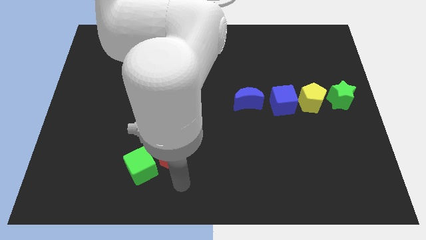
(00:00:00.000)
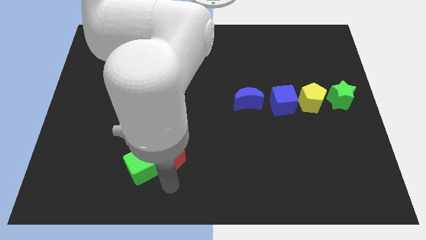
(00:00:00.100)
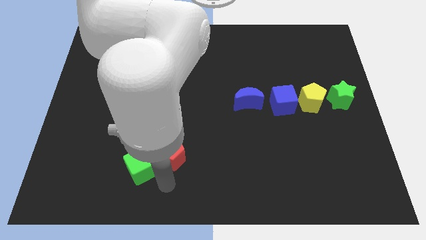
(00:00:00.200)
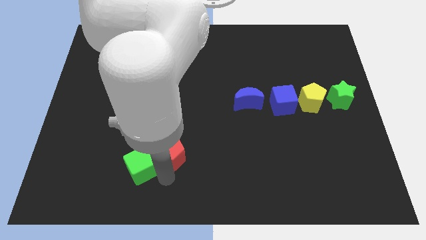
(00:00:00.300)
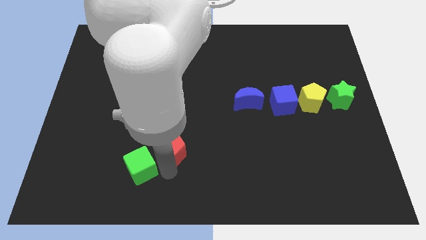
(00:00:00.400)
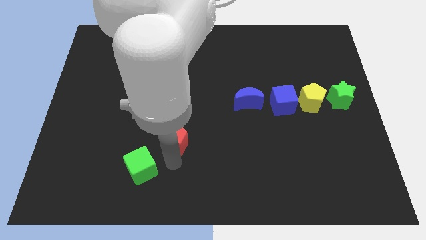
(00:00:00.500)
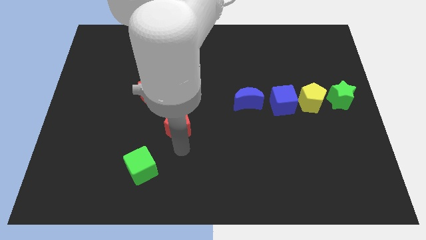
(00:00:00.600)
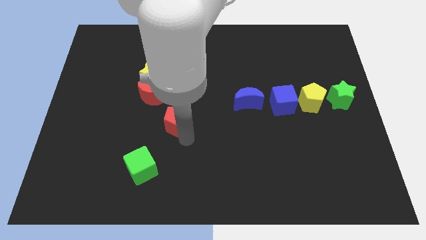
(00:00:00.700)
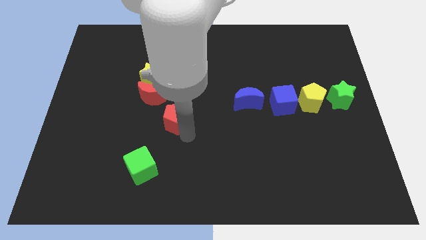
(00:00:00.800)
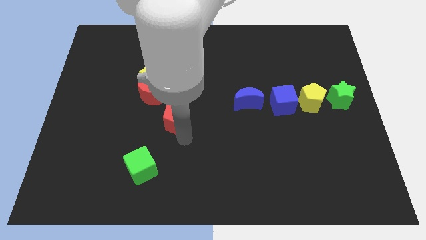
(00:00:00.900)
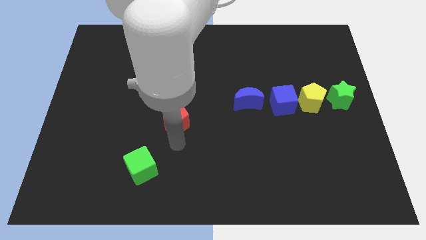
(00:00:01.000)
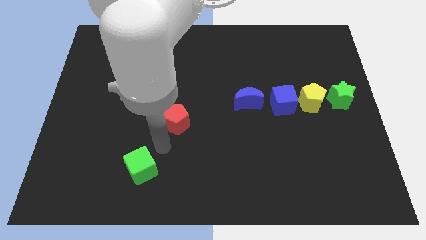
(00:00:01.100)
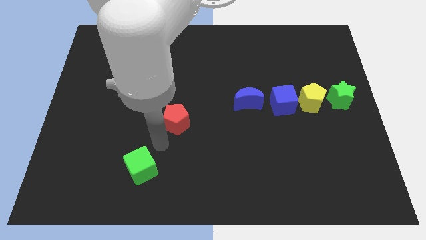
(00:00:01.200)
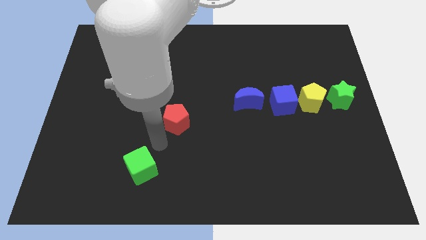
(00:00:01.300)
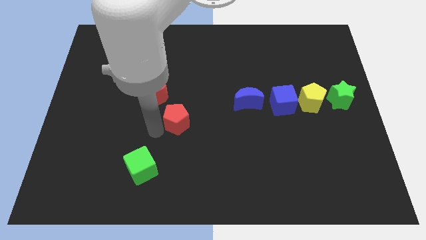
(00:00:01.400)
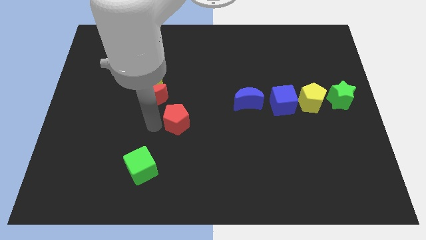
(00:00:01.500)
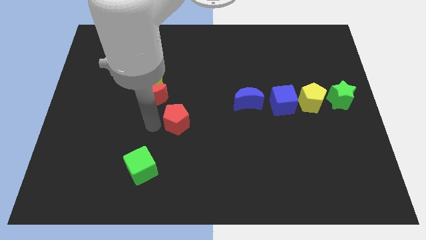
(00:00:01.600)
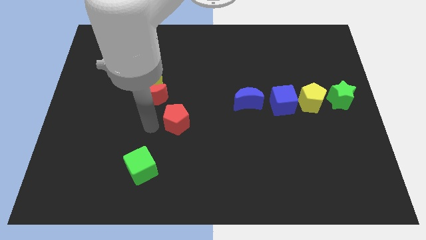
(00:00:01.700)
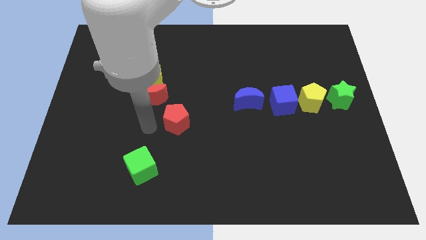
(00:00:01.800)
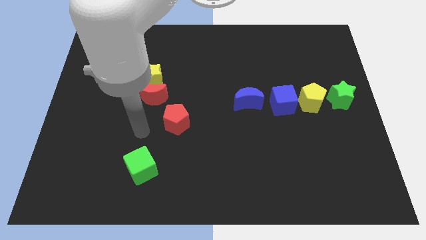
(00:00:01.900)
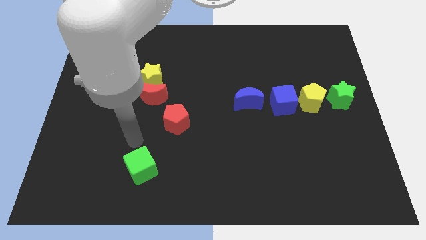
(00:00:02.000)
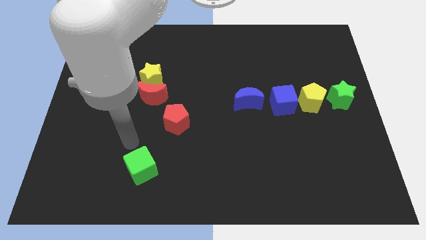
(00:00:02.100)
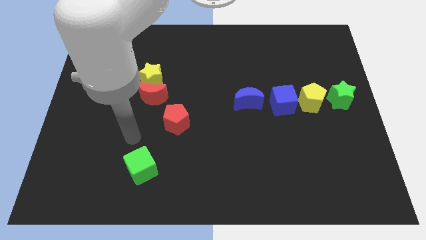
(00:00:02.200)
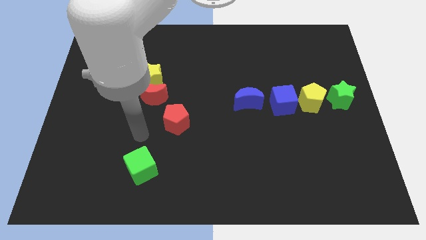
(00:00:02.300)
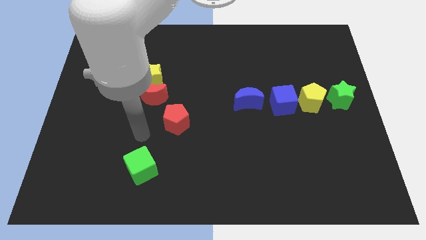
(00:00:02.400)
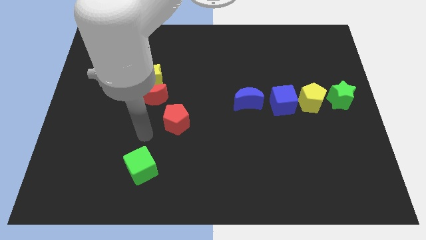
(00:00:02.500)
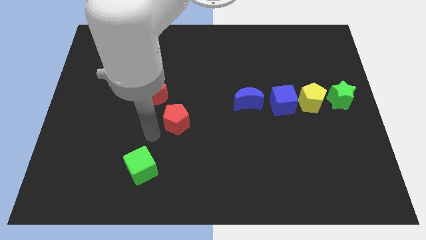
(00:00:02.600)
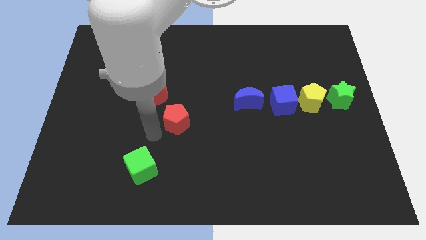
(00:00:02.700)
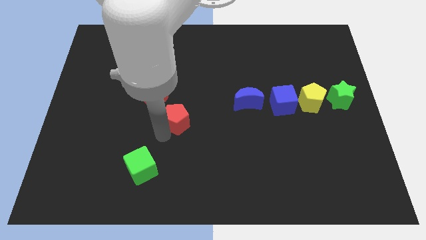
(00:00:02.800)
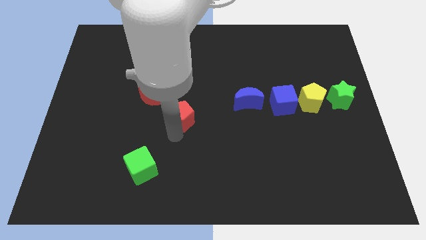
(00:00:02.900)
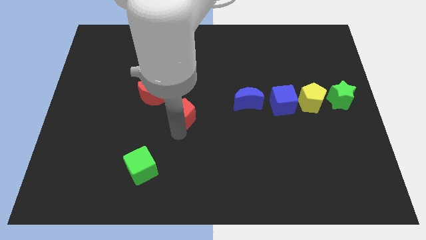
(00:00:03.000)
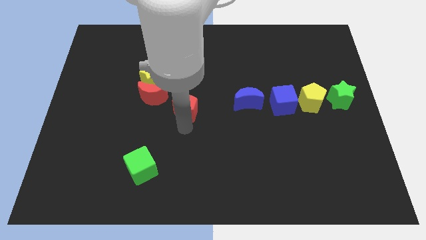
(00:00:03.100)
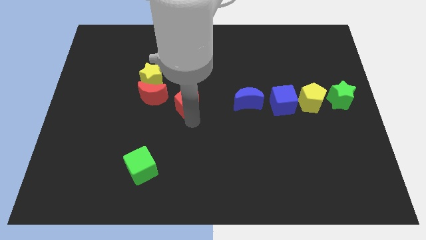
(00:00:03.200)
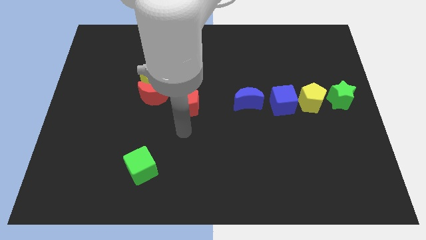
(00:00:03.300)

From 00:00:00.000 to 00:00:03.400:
place the red pentagon right to the red moon

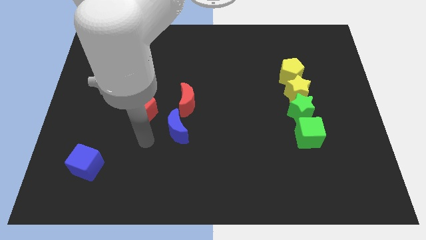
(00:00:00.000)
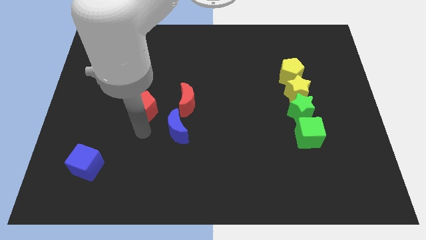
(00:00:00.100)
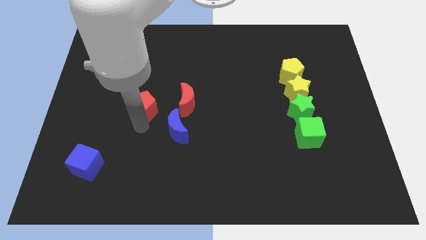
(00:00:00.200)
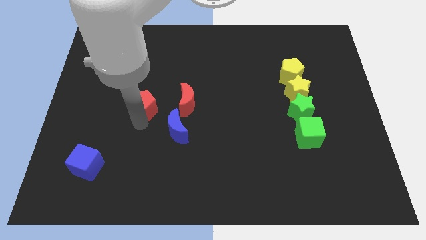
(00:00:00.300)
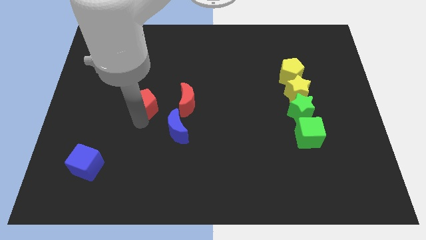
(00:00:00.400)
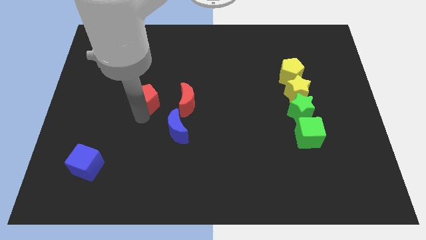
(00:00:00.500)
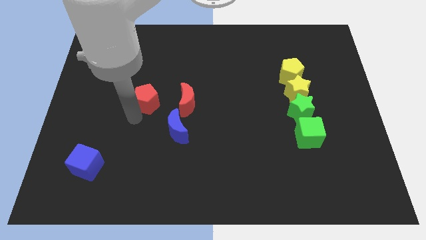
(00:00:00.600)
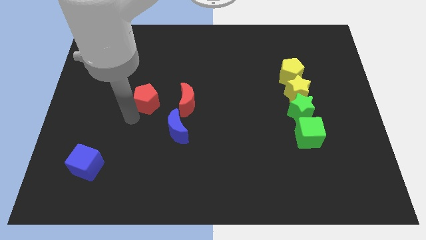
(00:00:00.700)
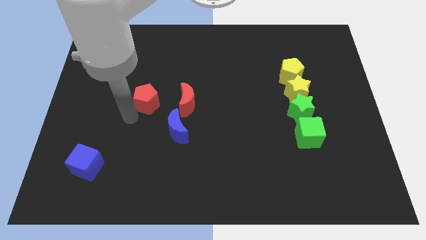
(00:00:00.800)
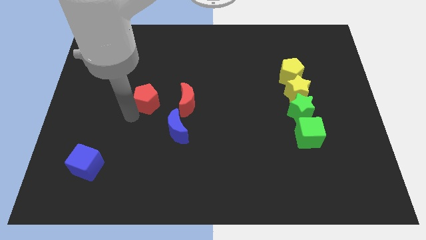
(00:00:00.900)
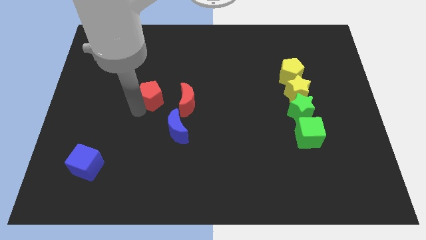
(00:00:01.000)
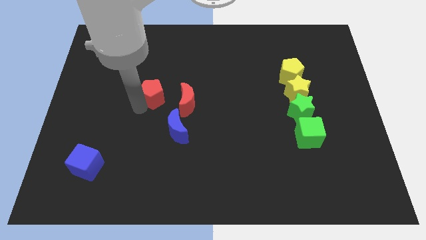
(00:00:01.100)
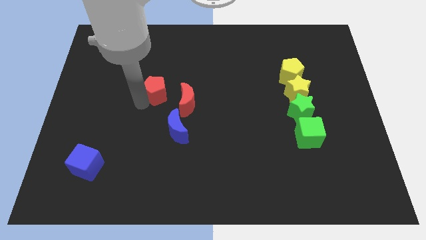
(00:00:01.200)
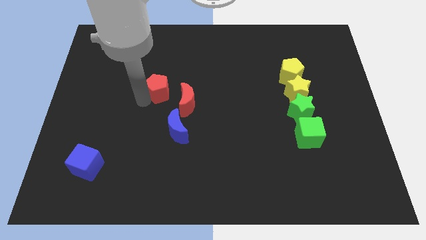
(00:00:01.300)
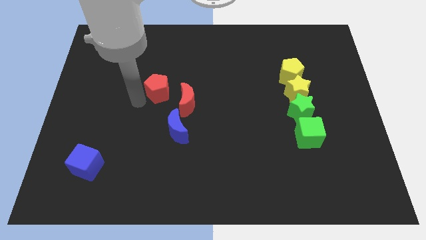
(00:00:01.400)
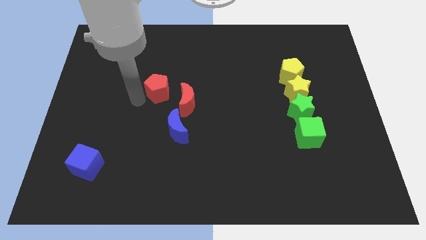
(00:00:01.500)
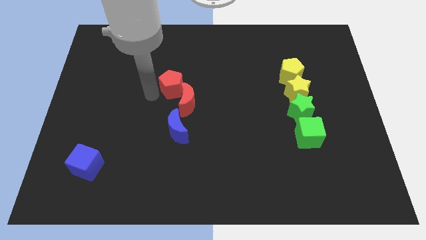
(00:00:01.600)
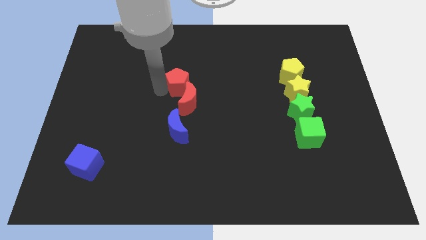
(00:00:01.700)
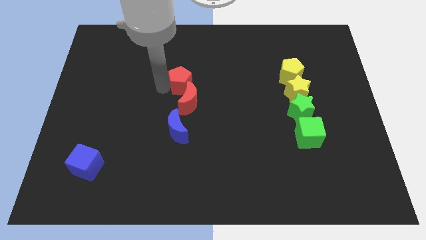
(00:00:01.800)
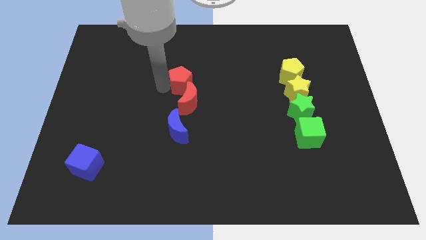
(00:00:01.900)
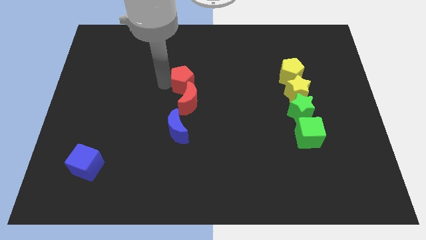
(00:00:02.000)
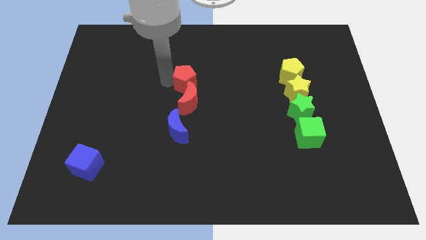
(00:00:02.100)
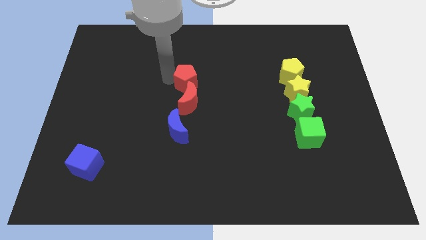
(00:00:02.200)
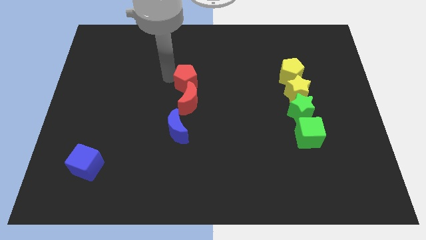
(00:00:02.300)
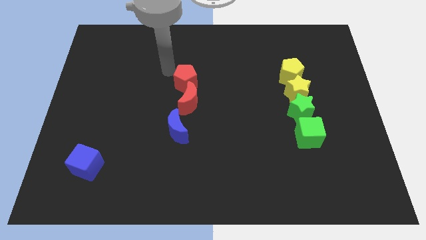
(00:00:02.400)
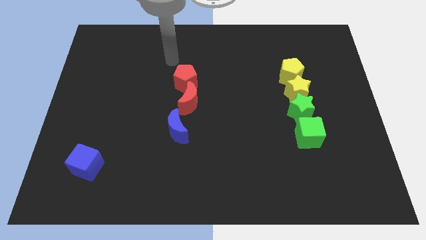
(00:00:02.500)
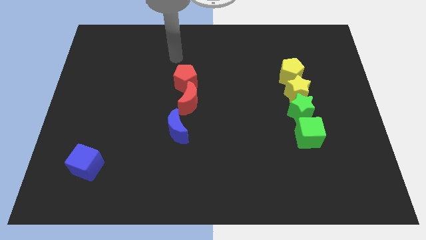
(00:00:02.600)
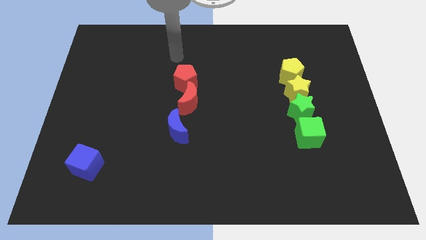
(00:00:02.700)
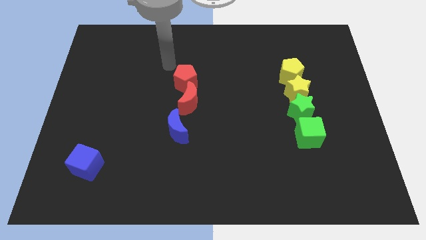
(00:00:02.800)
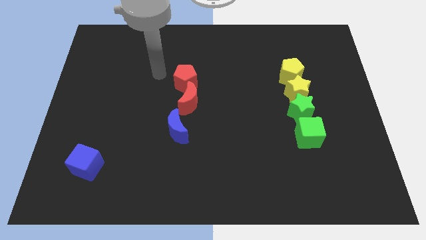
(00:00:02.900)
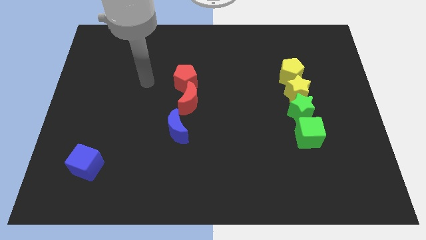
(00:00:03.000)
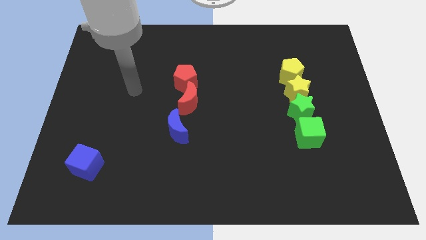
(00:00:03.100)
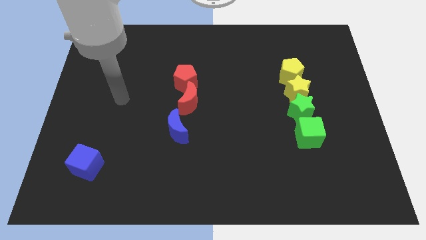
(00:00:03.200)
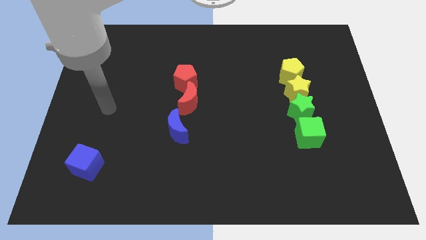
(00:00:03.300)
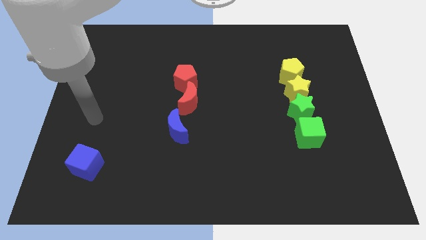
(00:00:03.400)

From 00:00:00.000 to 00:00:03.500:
slide the red pentagon towards the top of the red crescent

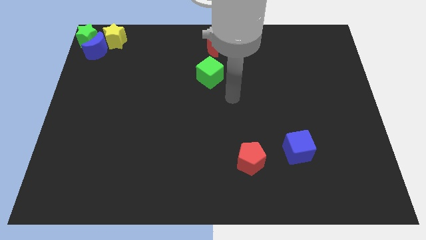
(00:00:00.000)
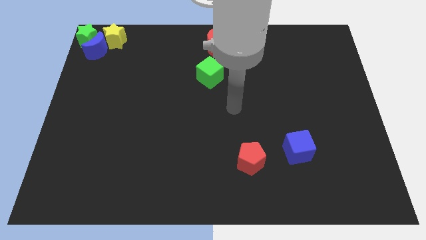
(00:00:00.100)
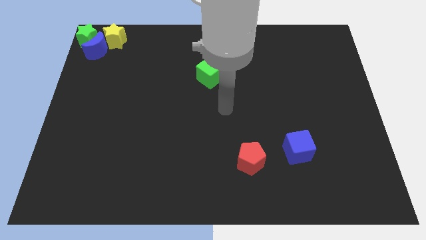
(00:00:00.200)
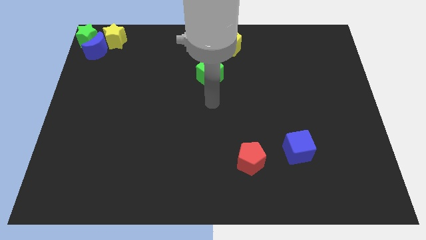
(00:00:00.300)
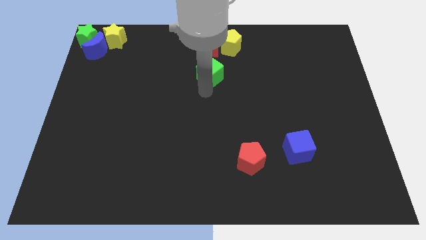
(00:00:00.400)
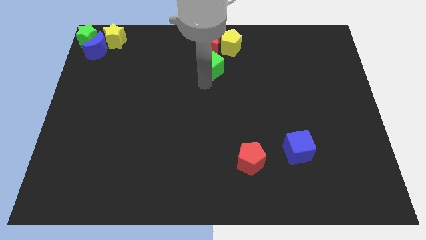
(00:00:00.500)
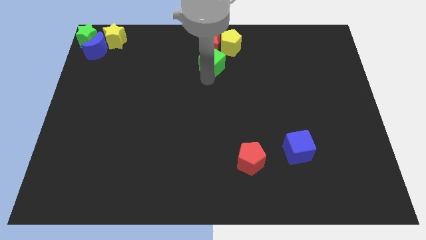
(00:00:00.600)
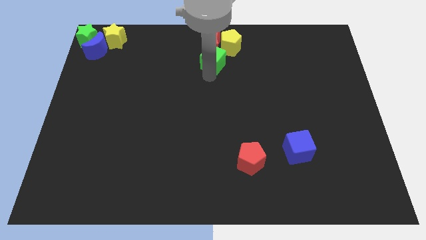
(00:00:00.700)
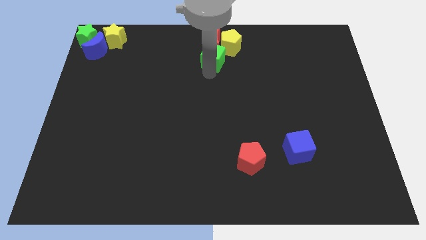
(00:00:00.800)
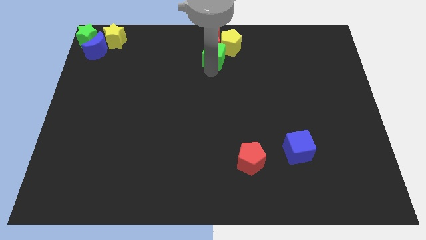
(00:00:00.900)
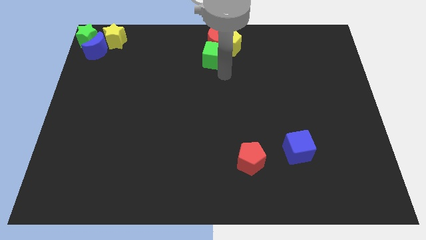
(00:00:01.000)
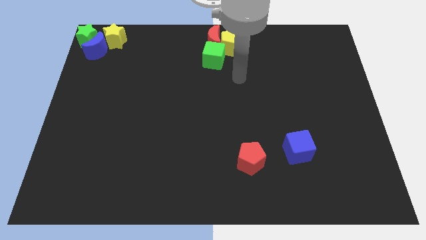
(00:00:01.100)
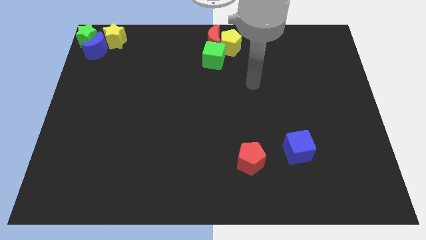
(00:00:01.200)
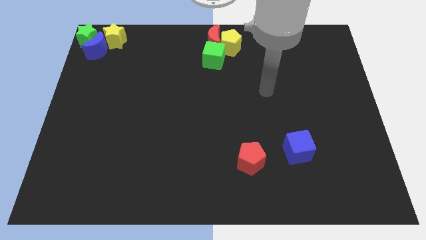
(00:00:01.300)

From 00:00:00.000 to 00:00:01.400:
place green cube down to the red crescent

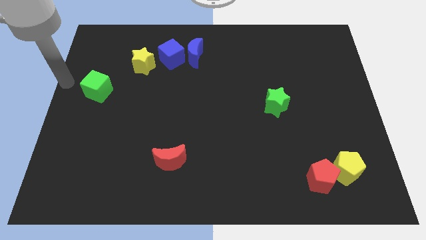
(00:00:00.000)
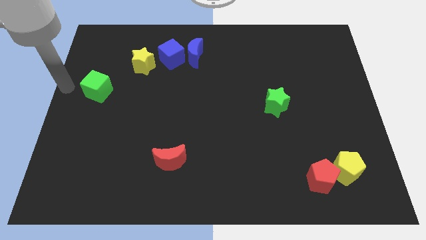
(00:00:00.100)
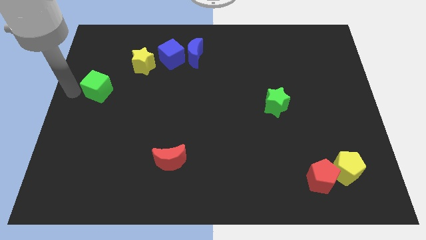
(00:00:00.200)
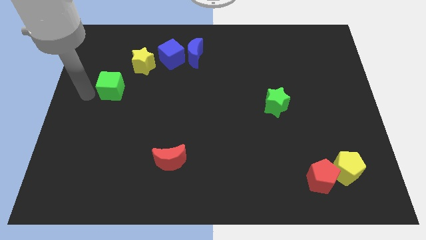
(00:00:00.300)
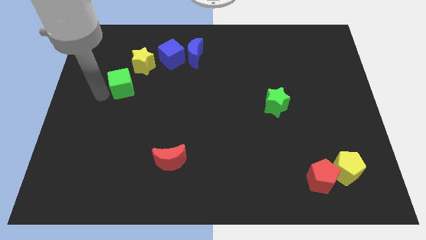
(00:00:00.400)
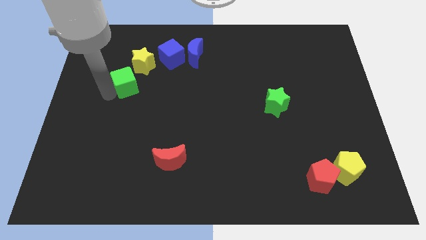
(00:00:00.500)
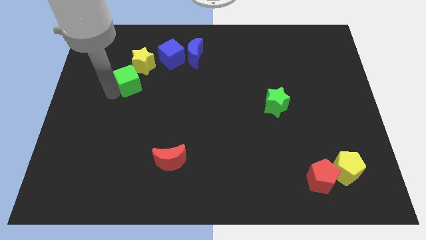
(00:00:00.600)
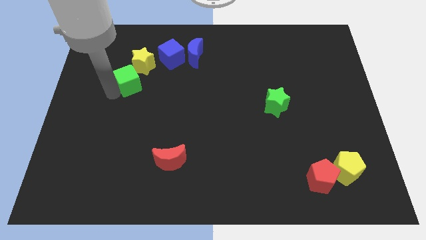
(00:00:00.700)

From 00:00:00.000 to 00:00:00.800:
push the green cube close to the yellow star
